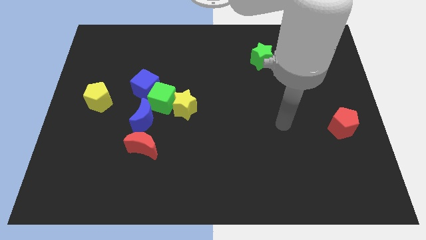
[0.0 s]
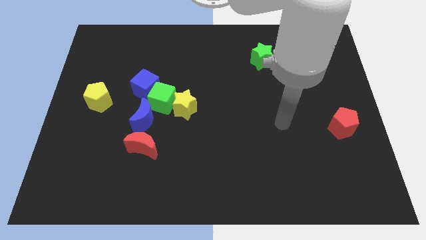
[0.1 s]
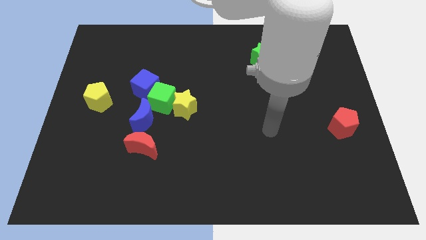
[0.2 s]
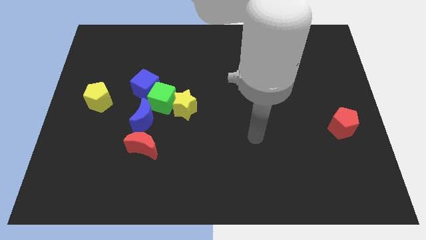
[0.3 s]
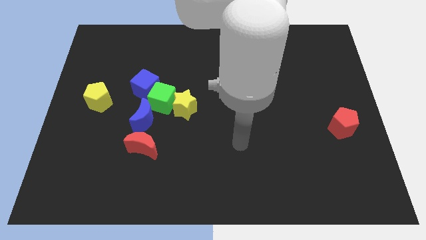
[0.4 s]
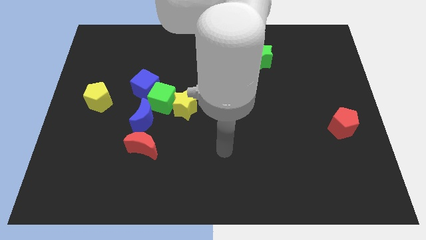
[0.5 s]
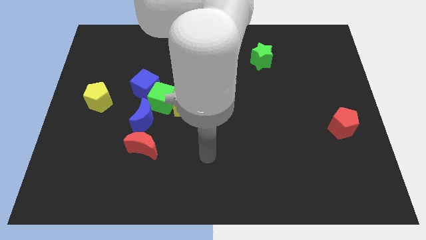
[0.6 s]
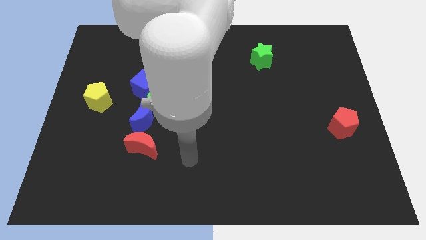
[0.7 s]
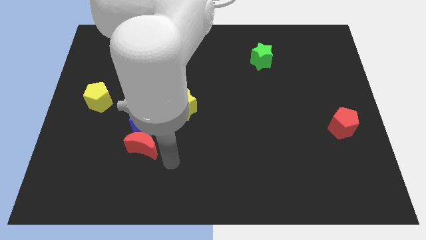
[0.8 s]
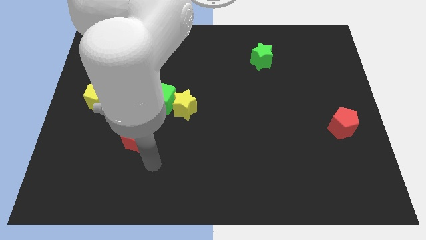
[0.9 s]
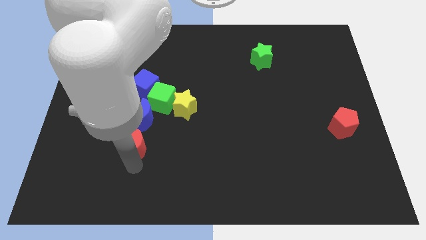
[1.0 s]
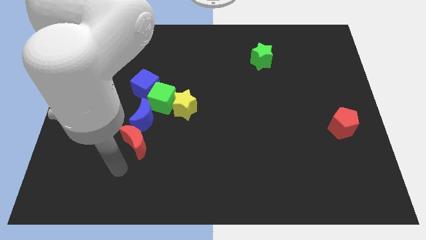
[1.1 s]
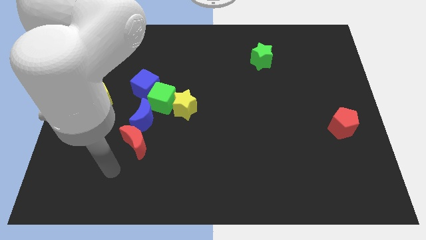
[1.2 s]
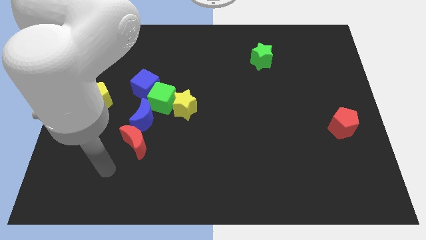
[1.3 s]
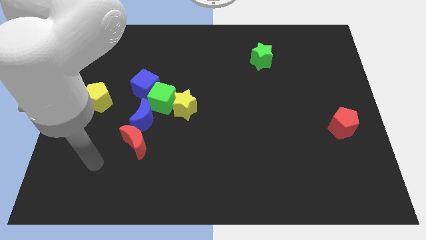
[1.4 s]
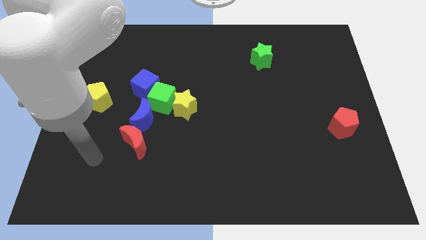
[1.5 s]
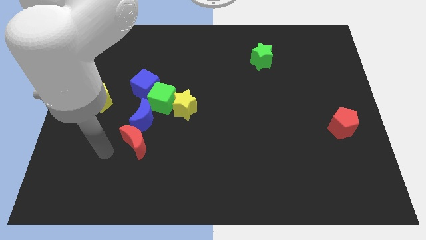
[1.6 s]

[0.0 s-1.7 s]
place your arm below red crescent

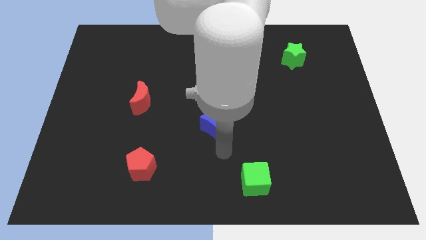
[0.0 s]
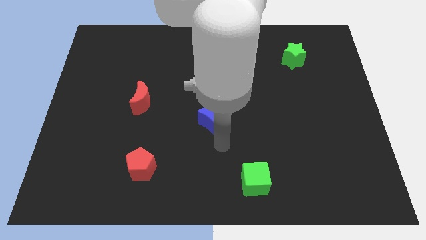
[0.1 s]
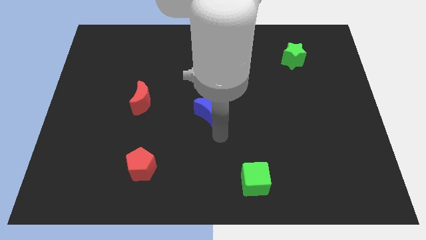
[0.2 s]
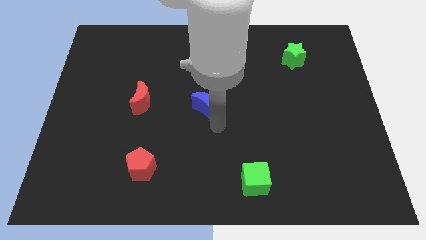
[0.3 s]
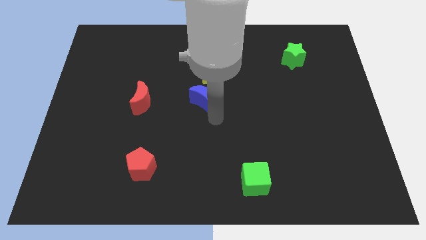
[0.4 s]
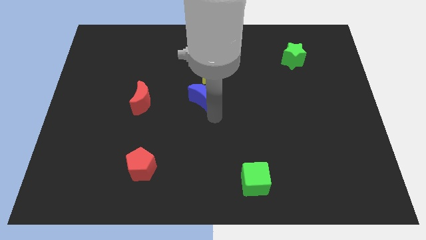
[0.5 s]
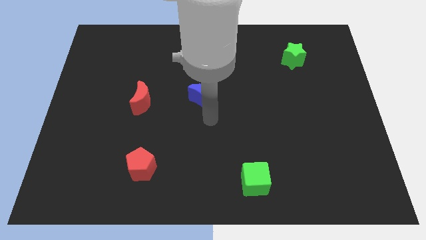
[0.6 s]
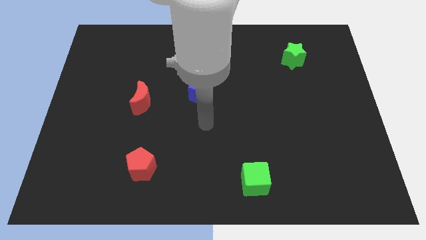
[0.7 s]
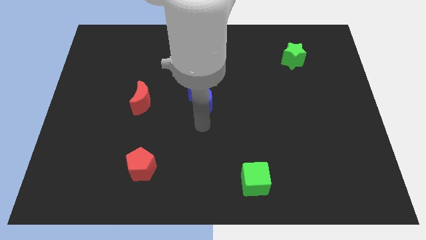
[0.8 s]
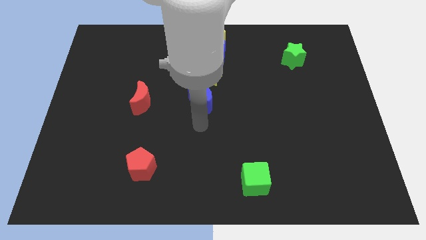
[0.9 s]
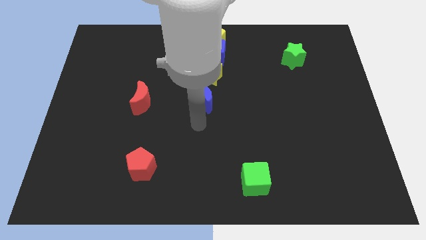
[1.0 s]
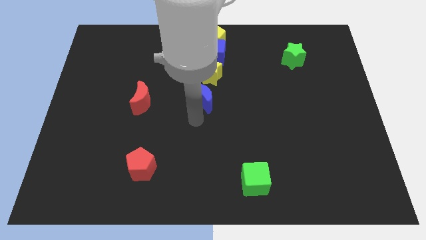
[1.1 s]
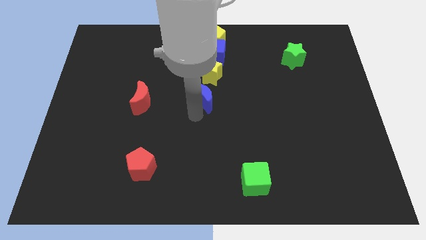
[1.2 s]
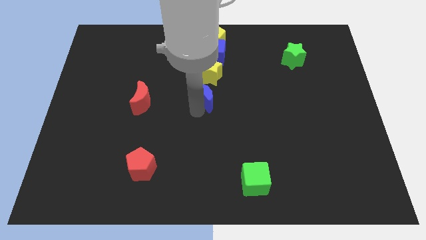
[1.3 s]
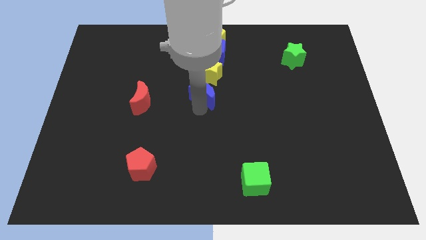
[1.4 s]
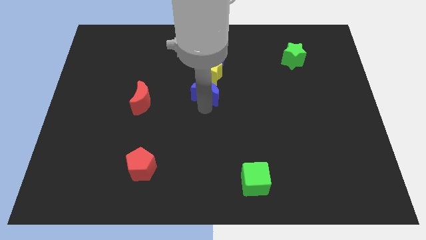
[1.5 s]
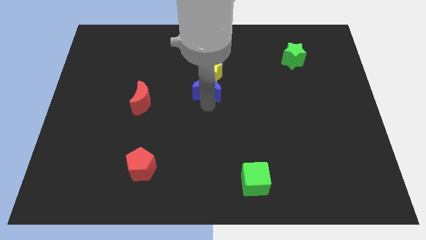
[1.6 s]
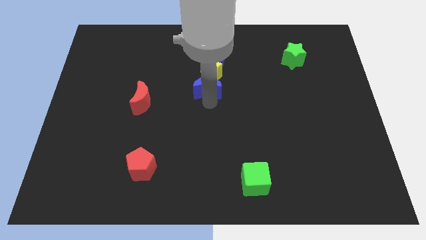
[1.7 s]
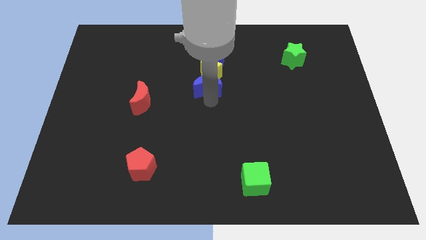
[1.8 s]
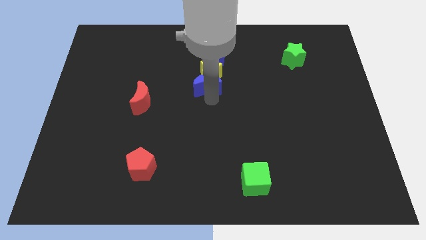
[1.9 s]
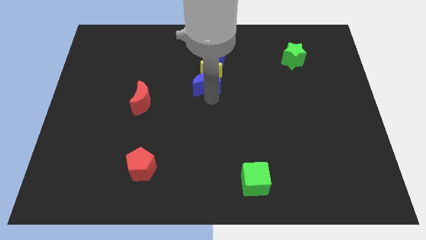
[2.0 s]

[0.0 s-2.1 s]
push the blue crescent below the yellow star

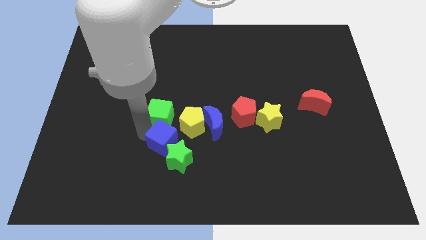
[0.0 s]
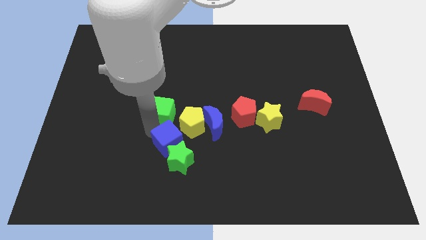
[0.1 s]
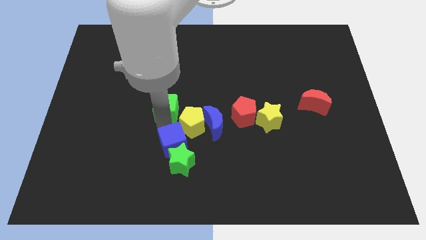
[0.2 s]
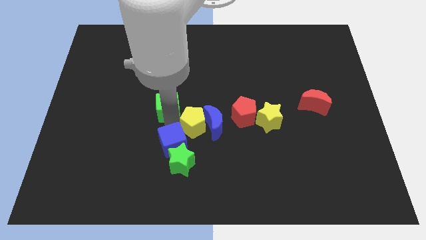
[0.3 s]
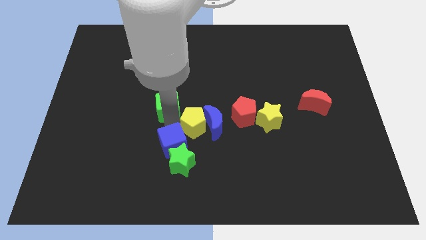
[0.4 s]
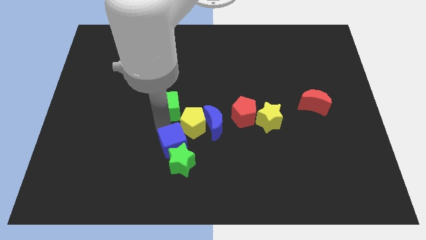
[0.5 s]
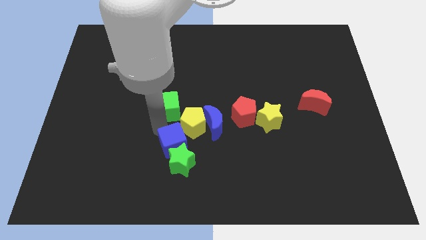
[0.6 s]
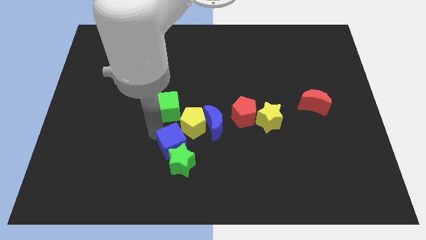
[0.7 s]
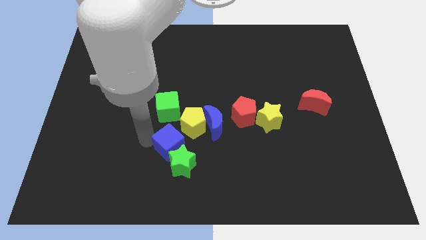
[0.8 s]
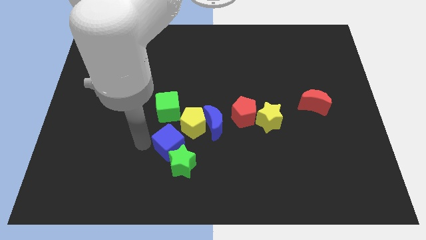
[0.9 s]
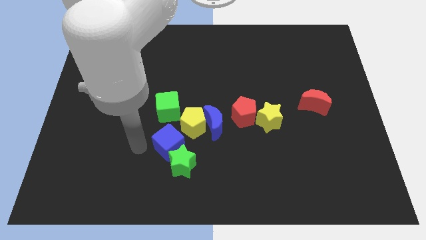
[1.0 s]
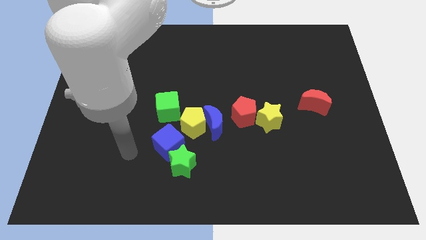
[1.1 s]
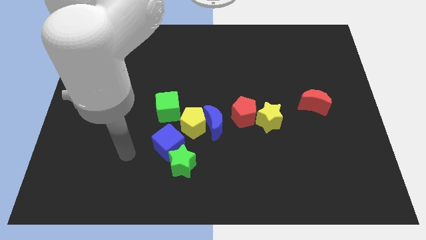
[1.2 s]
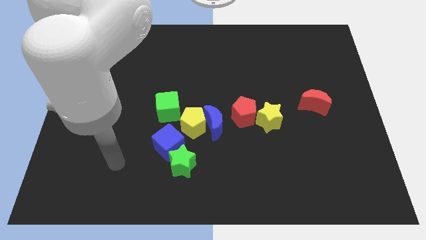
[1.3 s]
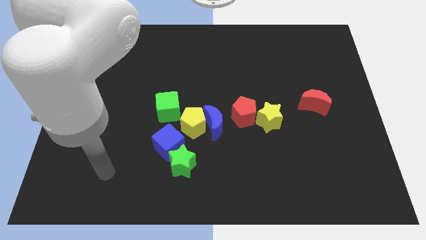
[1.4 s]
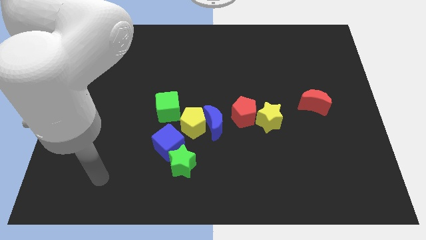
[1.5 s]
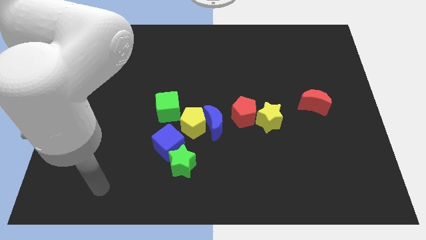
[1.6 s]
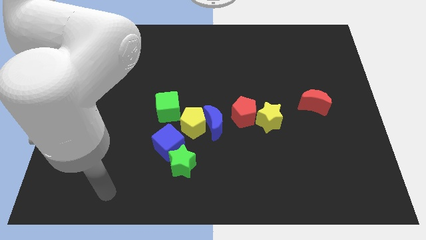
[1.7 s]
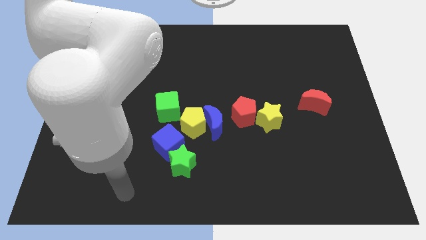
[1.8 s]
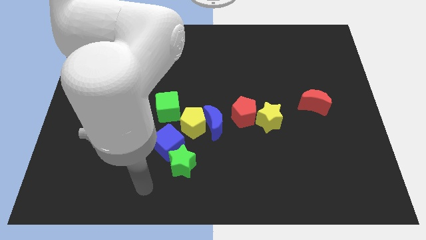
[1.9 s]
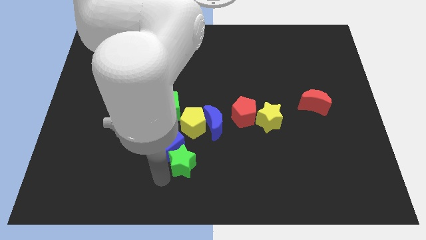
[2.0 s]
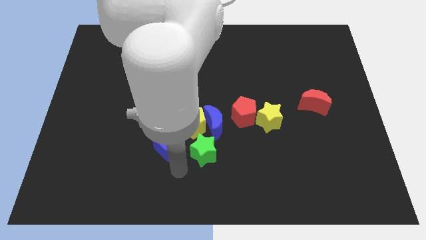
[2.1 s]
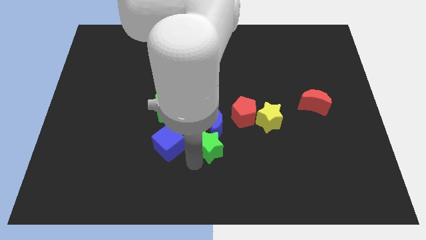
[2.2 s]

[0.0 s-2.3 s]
move the green star to the bottom of the blue crescent

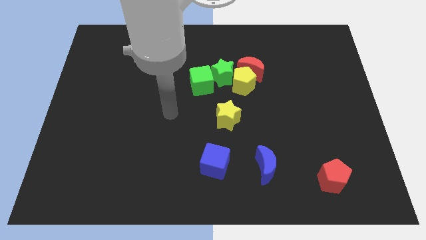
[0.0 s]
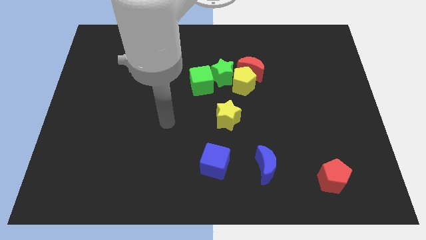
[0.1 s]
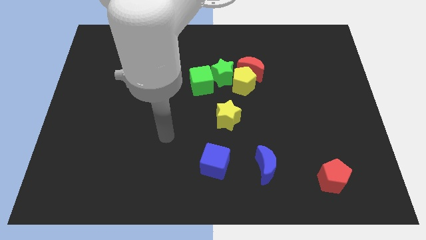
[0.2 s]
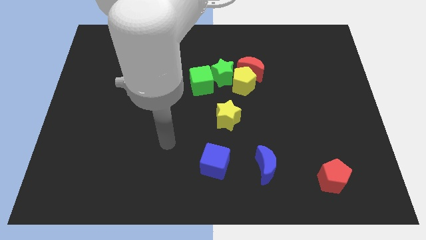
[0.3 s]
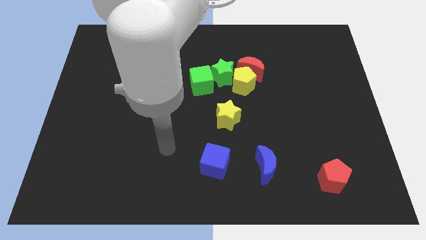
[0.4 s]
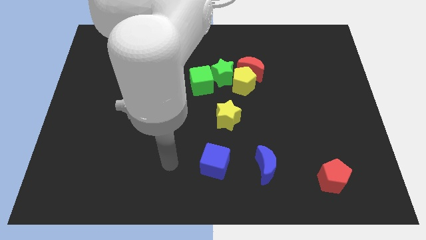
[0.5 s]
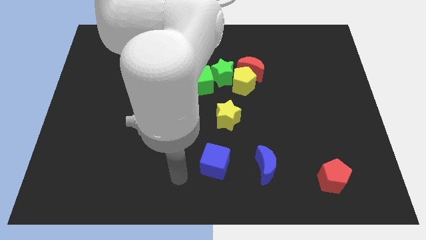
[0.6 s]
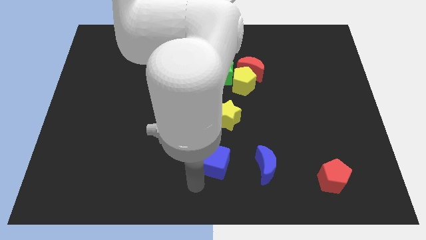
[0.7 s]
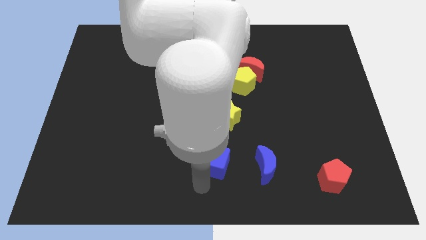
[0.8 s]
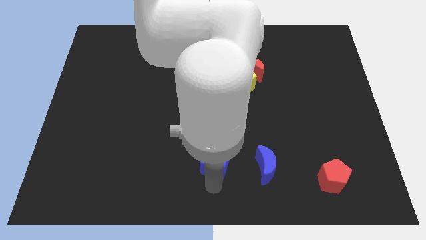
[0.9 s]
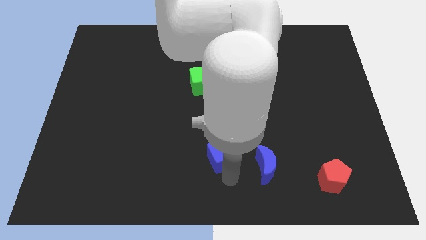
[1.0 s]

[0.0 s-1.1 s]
touch the bottom of blue cube

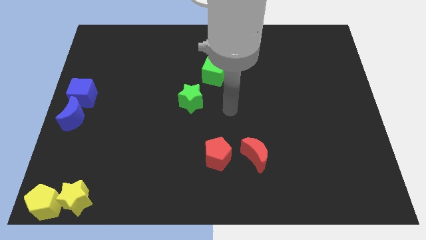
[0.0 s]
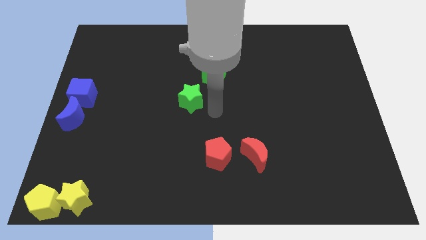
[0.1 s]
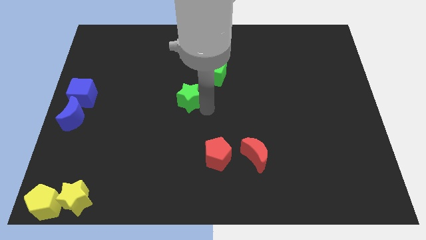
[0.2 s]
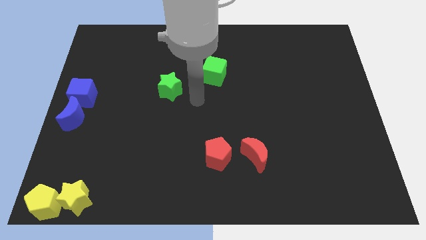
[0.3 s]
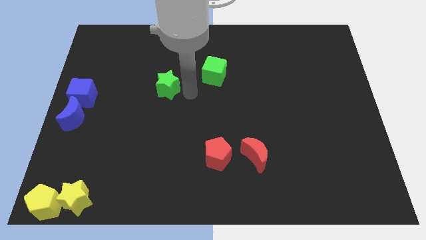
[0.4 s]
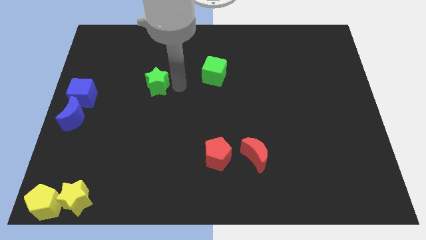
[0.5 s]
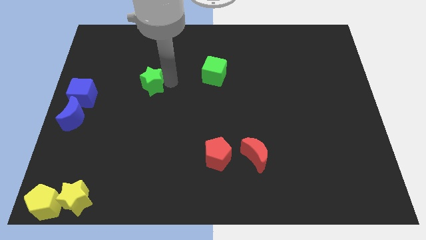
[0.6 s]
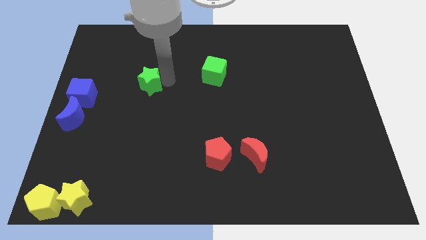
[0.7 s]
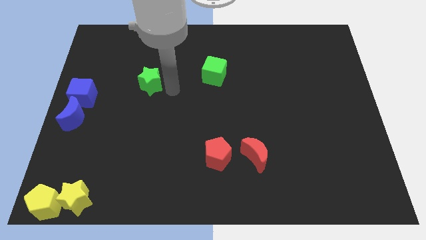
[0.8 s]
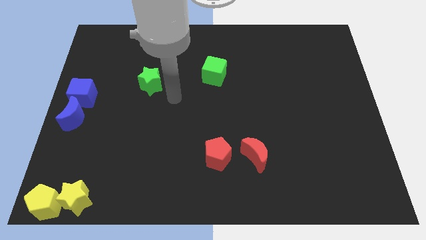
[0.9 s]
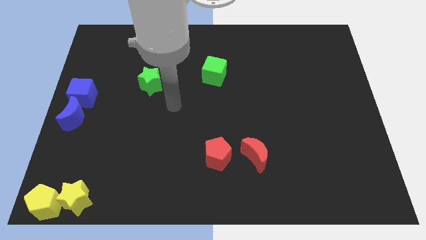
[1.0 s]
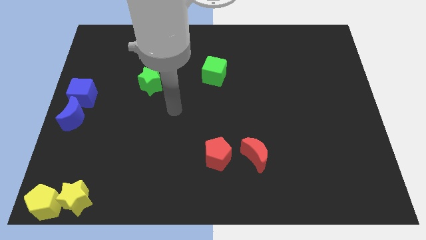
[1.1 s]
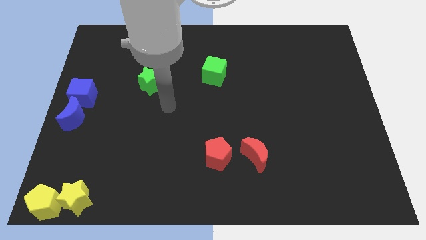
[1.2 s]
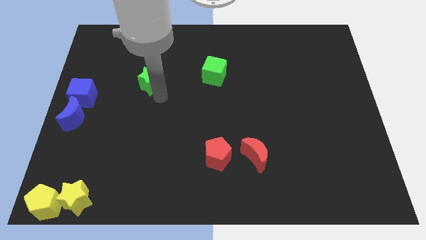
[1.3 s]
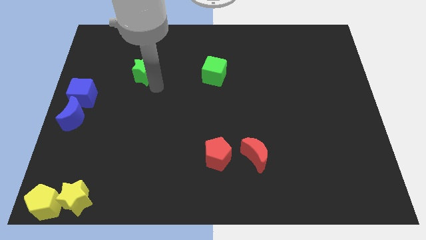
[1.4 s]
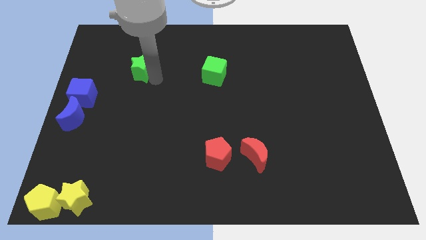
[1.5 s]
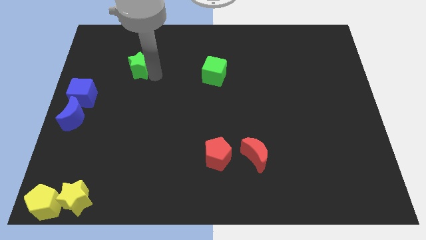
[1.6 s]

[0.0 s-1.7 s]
push the green star diagonally top right to the blue cube
